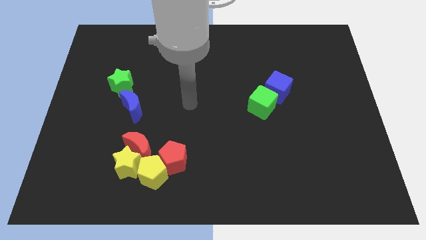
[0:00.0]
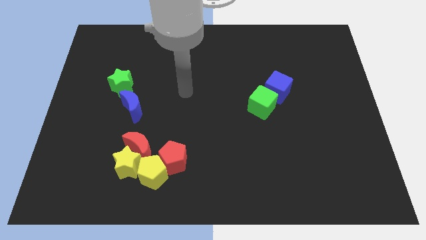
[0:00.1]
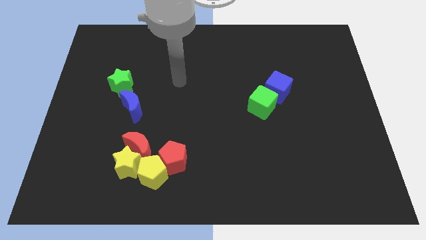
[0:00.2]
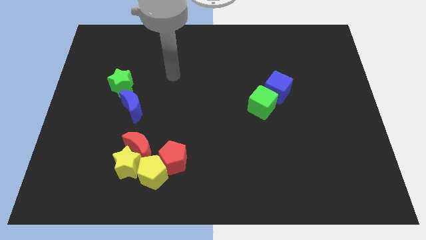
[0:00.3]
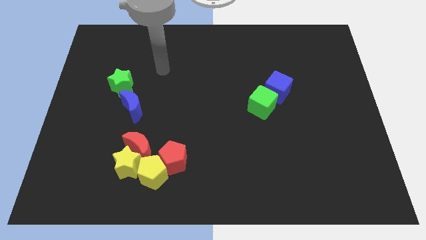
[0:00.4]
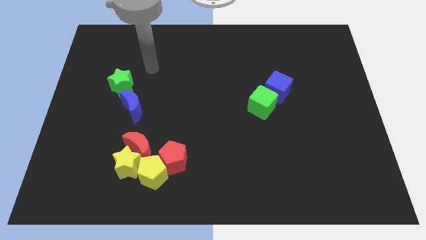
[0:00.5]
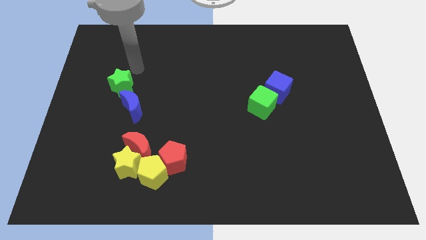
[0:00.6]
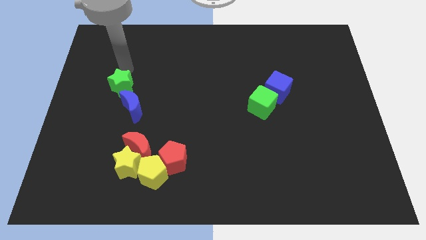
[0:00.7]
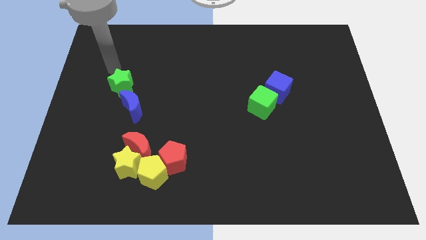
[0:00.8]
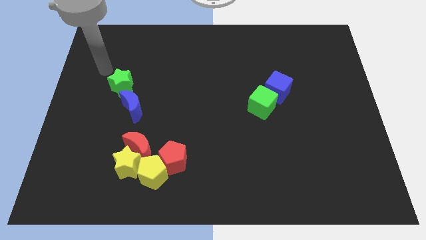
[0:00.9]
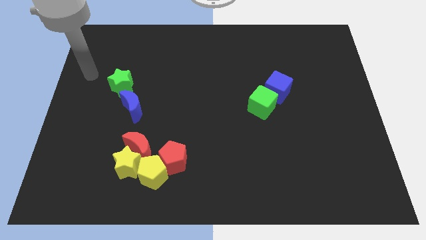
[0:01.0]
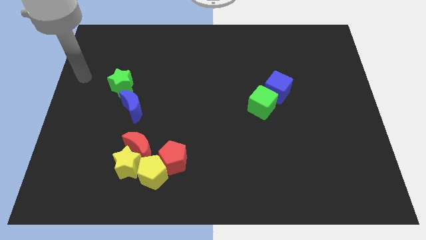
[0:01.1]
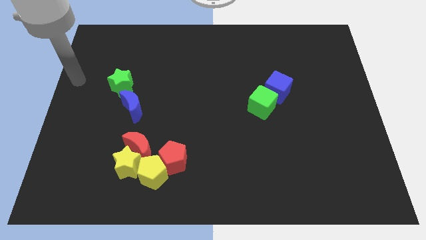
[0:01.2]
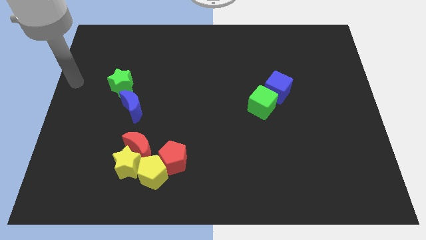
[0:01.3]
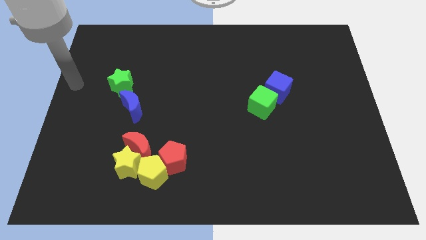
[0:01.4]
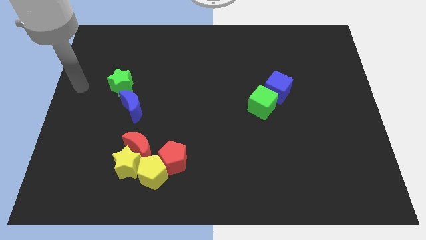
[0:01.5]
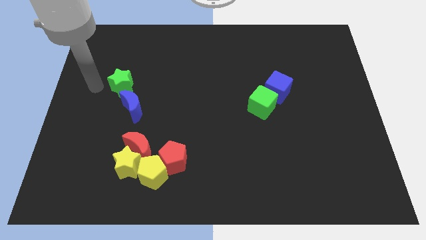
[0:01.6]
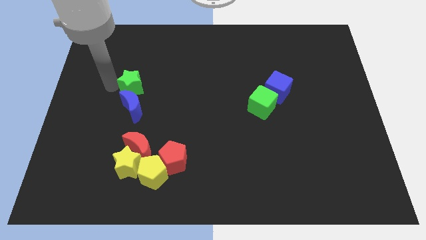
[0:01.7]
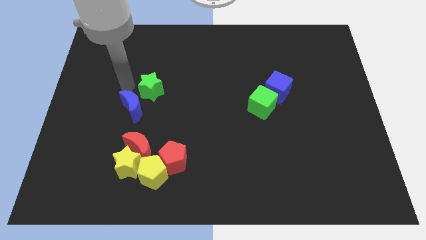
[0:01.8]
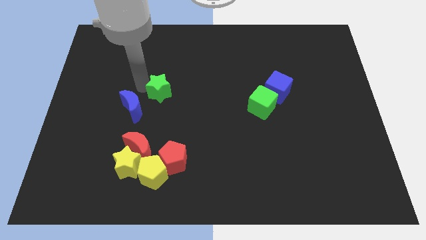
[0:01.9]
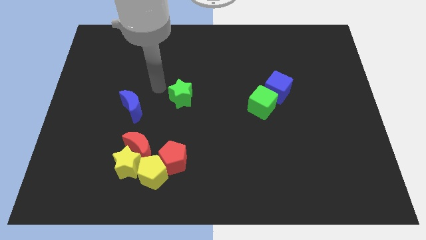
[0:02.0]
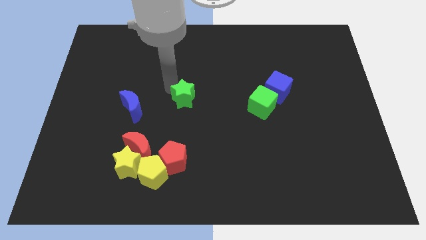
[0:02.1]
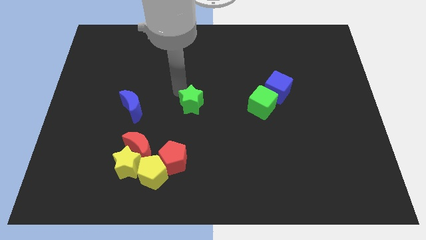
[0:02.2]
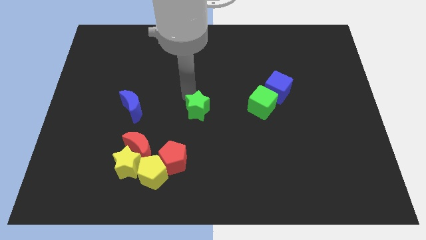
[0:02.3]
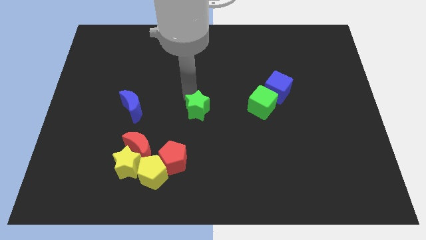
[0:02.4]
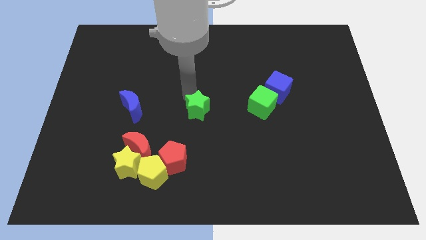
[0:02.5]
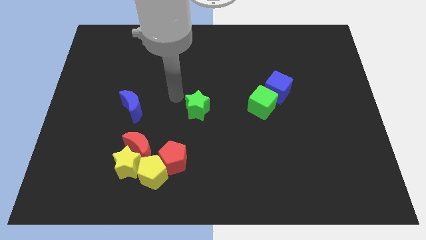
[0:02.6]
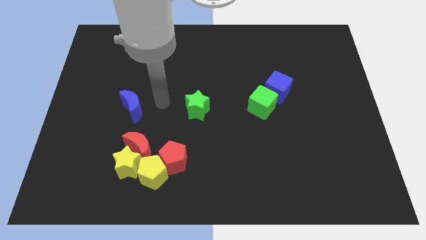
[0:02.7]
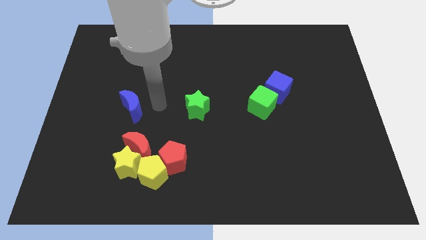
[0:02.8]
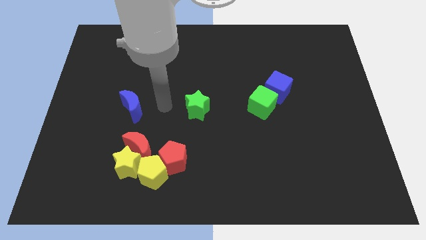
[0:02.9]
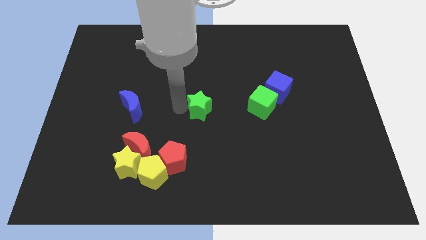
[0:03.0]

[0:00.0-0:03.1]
place the green star horizontally in between the green cube and blue moon

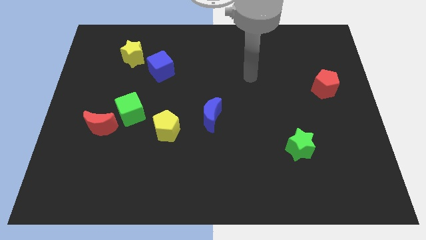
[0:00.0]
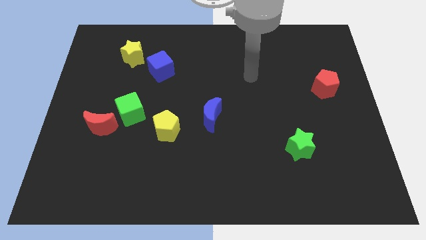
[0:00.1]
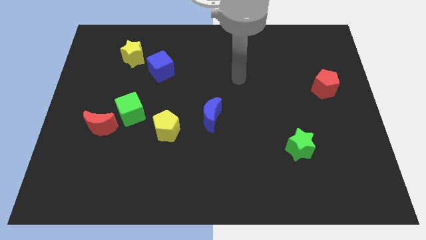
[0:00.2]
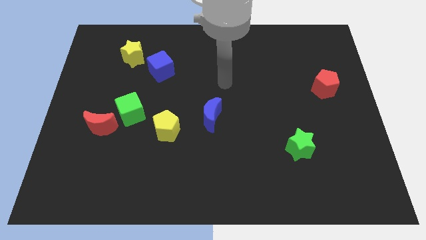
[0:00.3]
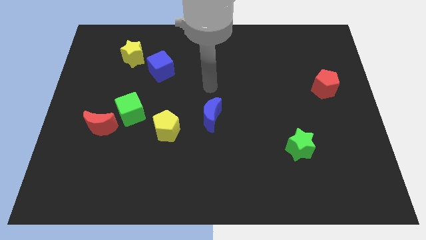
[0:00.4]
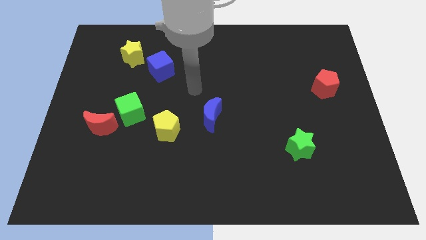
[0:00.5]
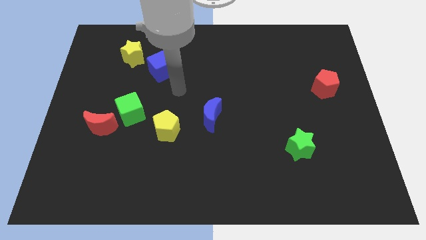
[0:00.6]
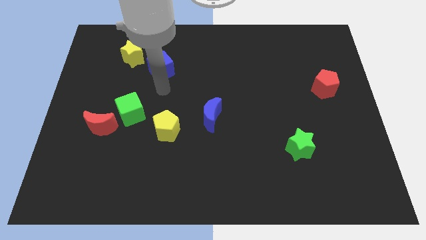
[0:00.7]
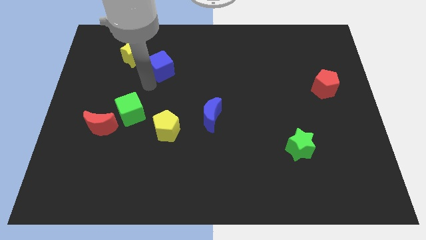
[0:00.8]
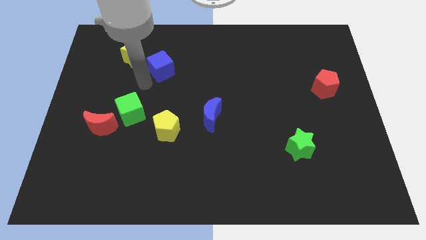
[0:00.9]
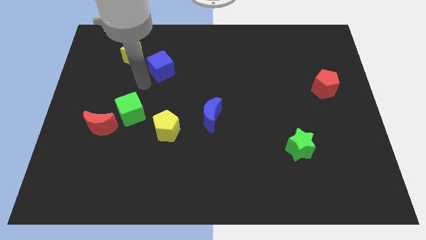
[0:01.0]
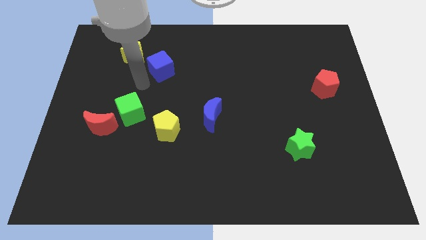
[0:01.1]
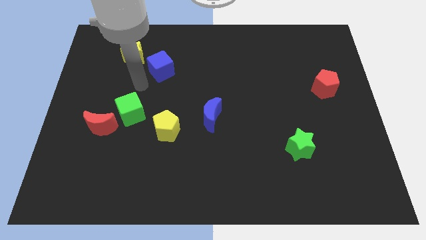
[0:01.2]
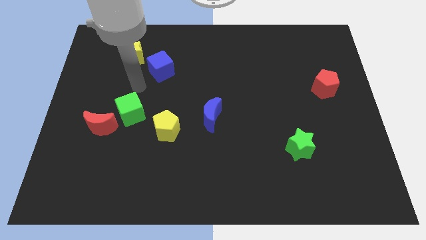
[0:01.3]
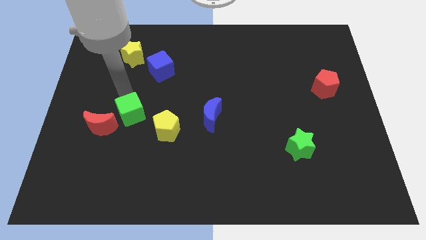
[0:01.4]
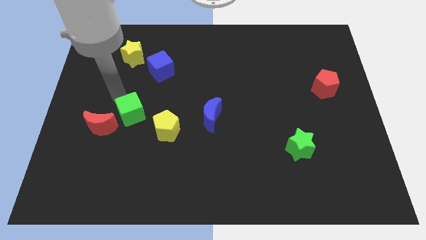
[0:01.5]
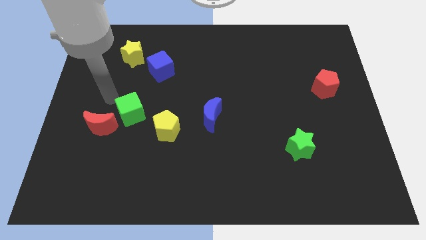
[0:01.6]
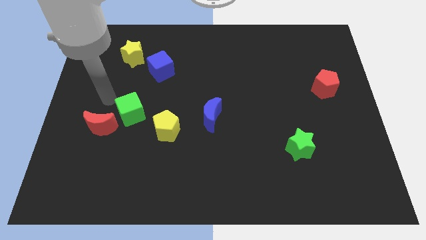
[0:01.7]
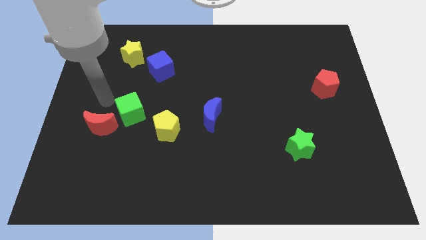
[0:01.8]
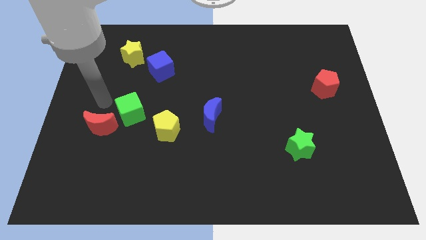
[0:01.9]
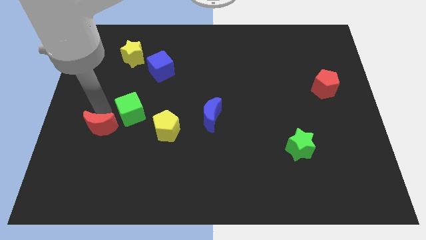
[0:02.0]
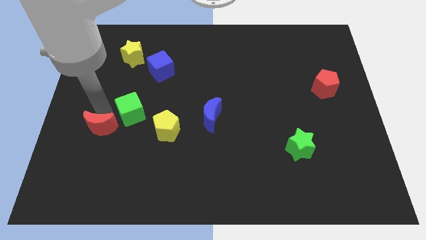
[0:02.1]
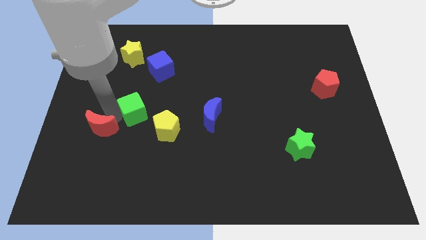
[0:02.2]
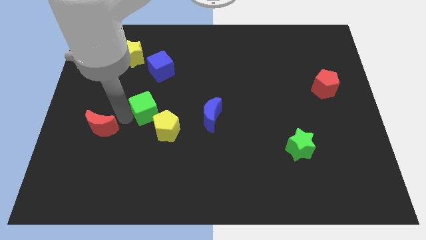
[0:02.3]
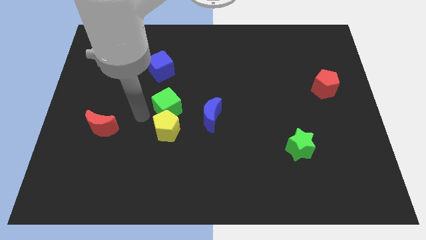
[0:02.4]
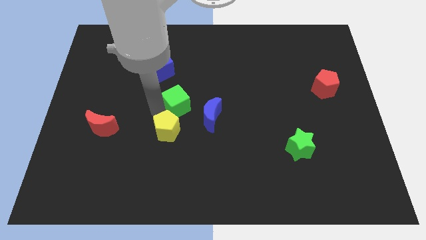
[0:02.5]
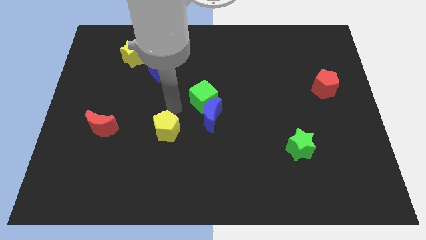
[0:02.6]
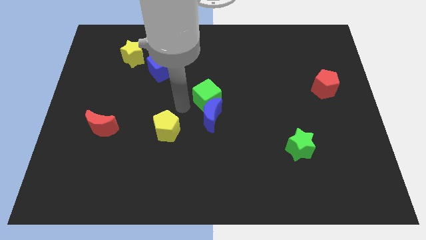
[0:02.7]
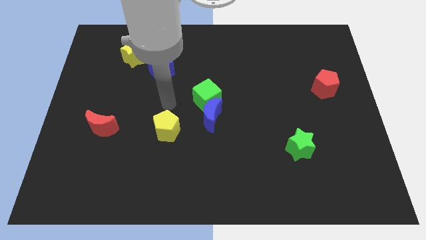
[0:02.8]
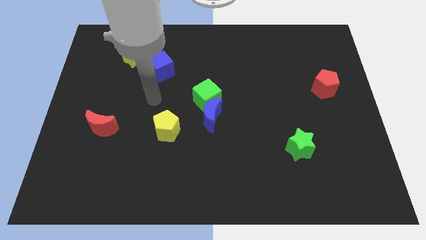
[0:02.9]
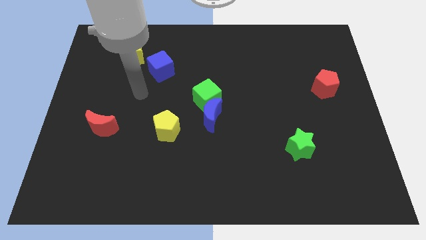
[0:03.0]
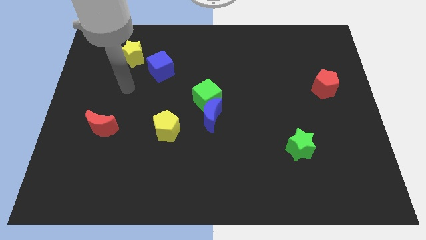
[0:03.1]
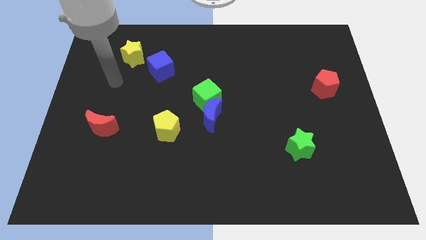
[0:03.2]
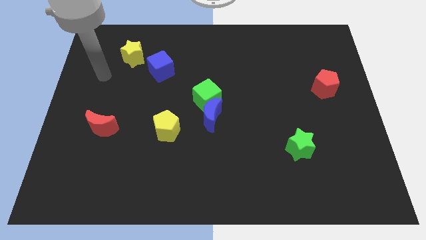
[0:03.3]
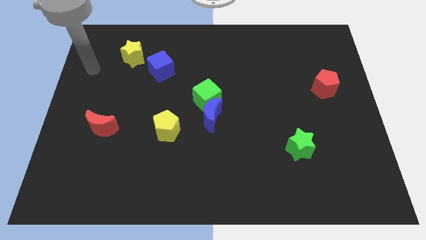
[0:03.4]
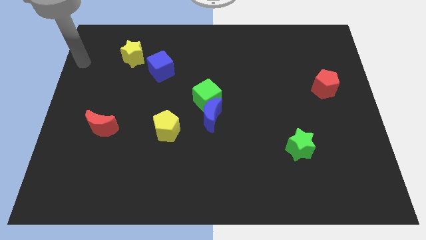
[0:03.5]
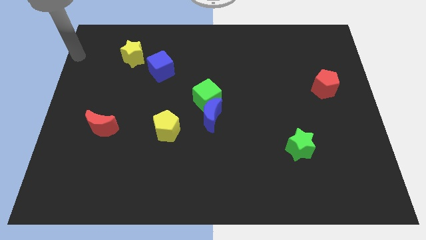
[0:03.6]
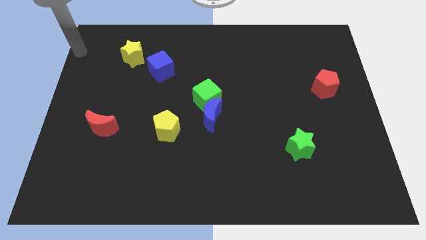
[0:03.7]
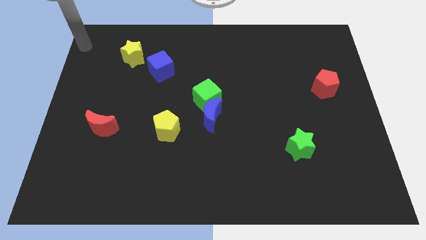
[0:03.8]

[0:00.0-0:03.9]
place green cube above blue moon

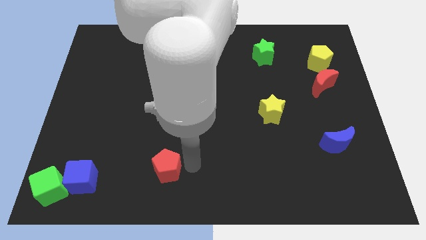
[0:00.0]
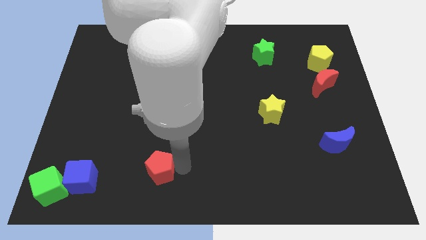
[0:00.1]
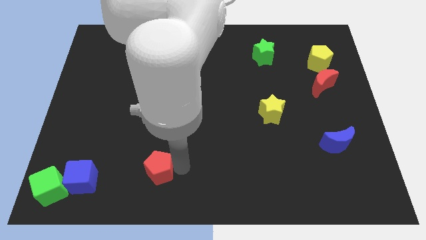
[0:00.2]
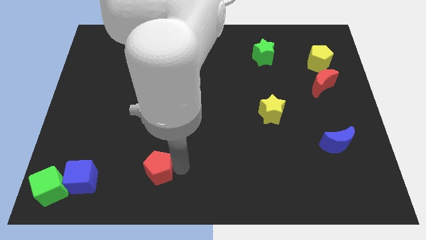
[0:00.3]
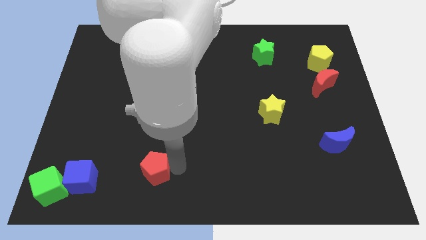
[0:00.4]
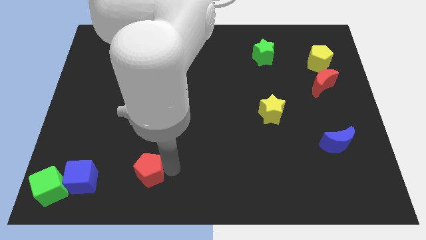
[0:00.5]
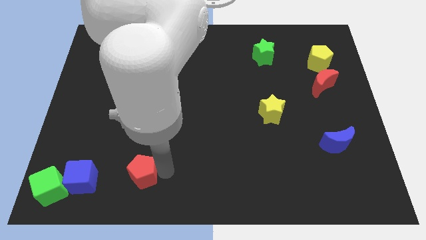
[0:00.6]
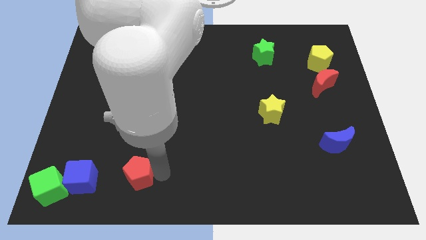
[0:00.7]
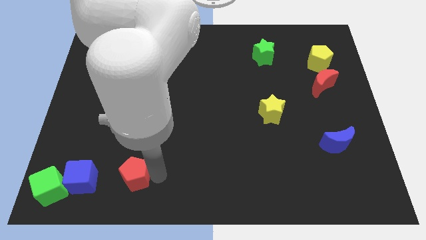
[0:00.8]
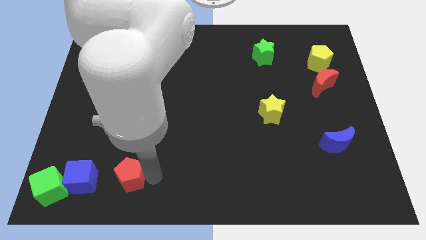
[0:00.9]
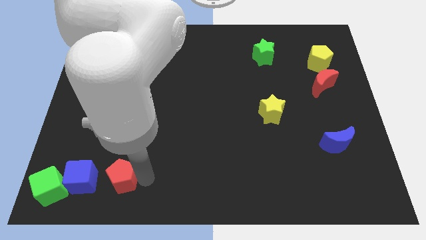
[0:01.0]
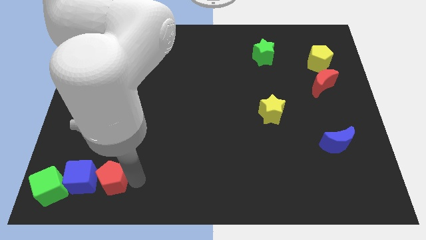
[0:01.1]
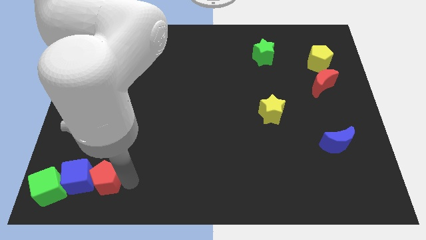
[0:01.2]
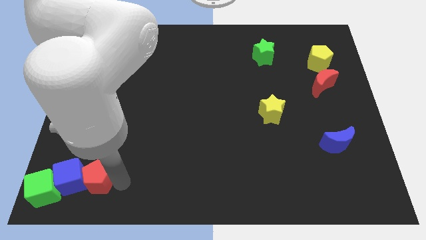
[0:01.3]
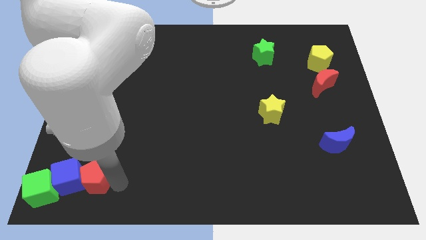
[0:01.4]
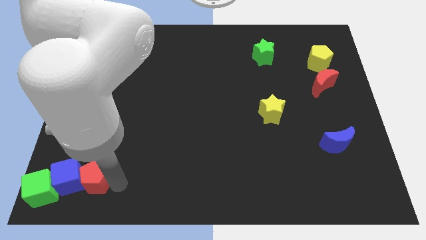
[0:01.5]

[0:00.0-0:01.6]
move the red pentagon to the right of the blue cube

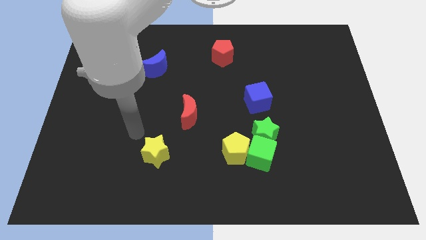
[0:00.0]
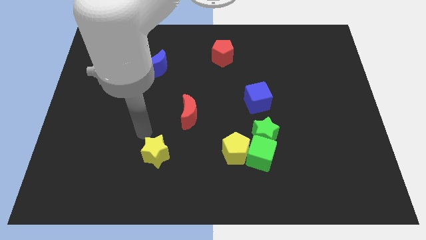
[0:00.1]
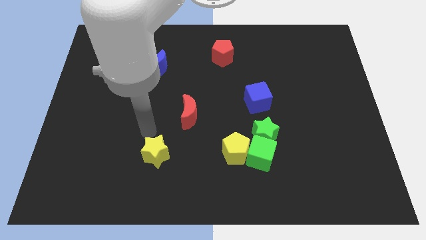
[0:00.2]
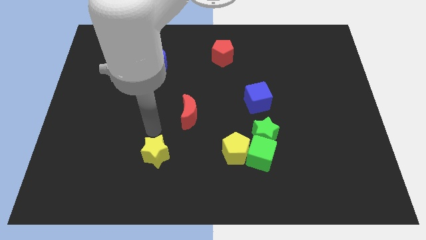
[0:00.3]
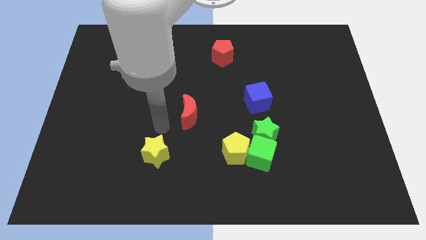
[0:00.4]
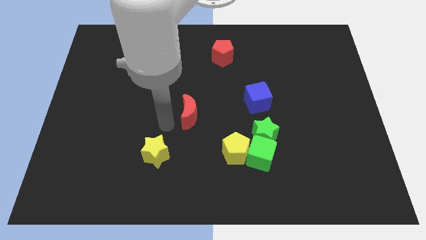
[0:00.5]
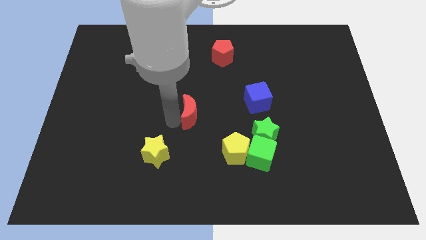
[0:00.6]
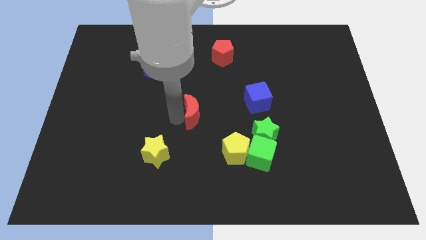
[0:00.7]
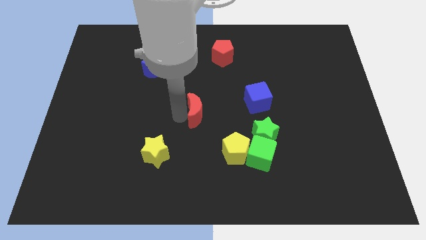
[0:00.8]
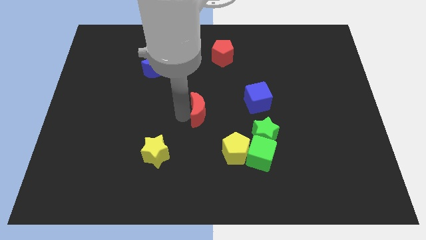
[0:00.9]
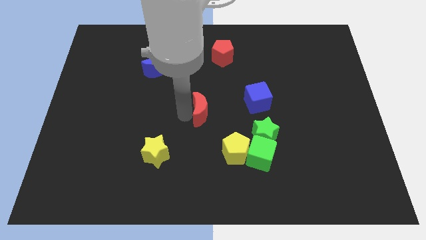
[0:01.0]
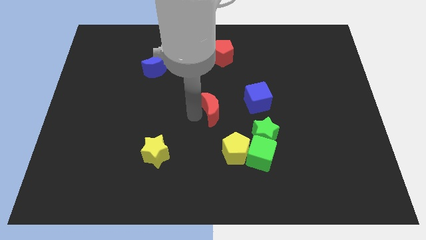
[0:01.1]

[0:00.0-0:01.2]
push the red crescent slightly to the right
